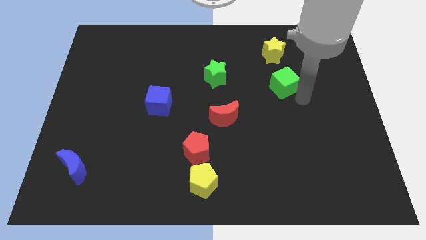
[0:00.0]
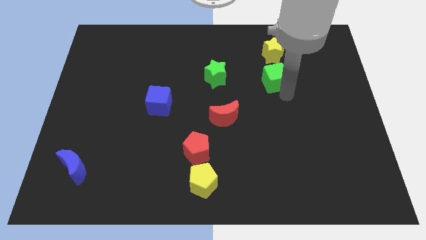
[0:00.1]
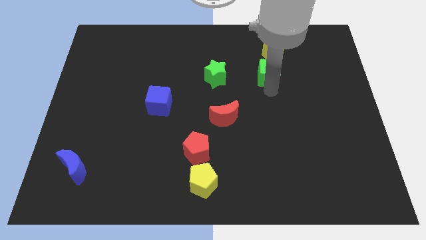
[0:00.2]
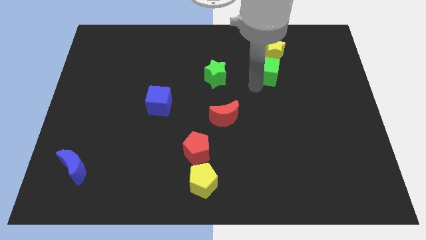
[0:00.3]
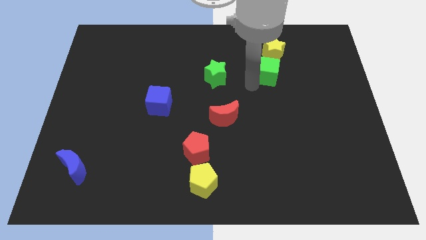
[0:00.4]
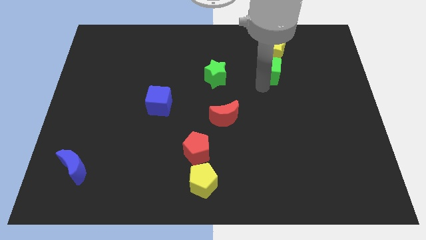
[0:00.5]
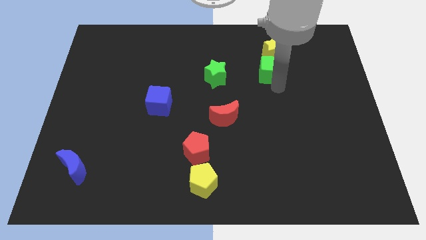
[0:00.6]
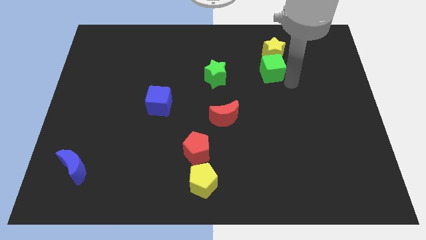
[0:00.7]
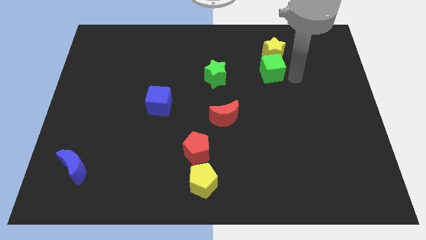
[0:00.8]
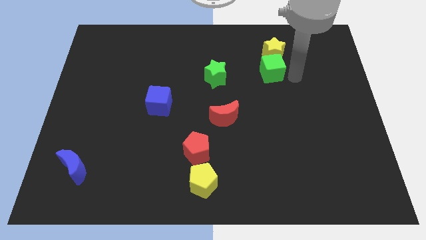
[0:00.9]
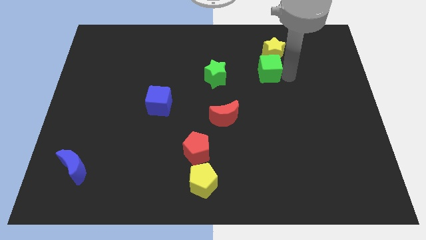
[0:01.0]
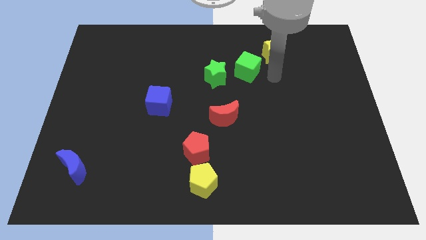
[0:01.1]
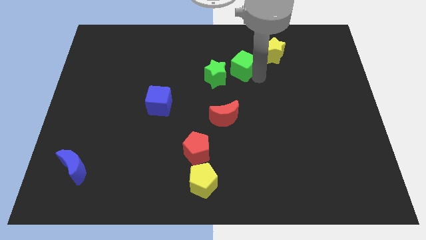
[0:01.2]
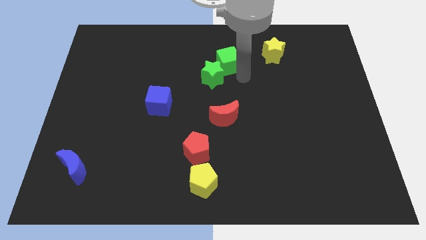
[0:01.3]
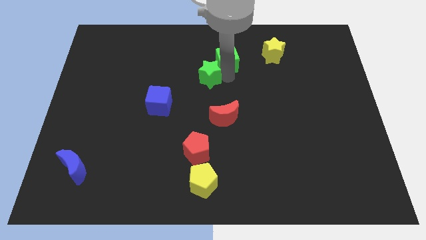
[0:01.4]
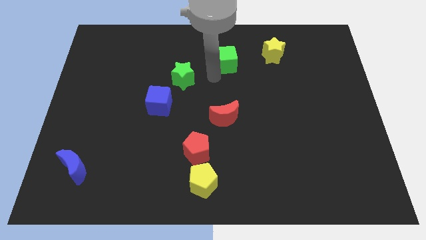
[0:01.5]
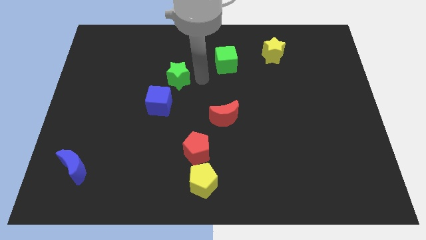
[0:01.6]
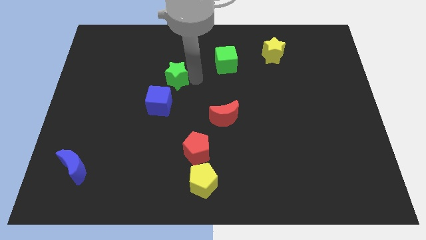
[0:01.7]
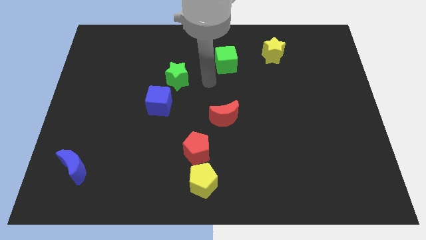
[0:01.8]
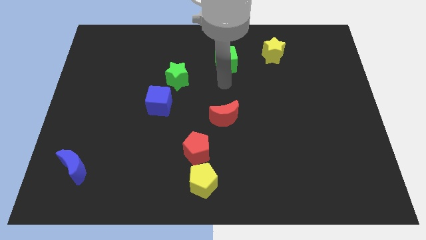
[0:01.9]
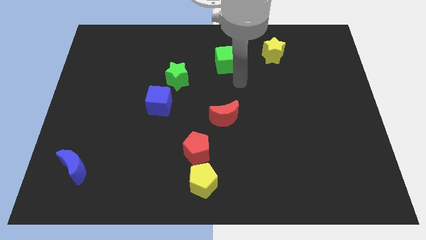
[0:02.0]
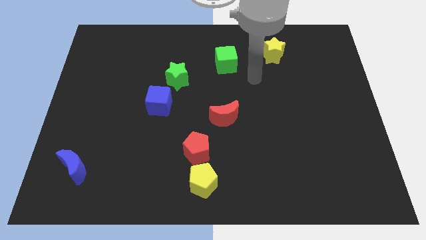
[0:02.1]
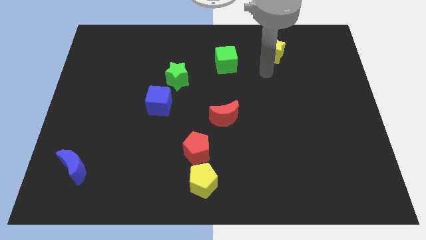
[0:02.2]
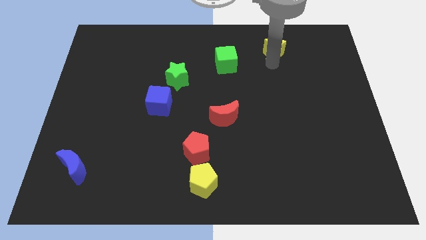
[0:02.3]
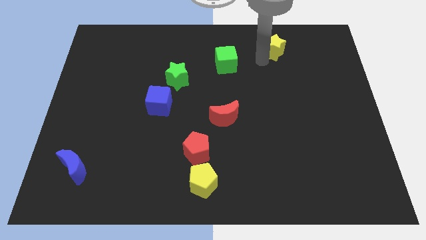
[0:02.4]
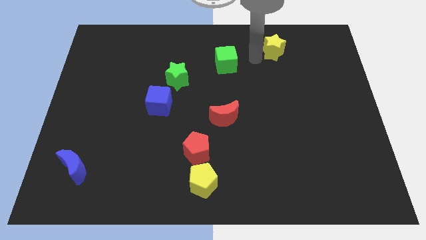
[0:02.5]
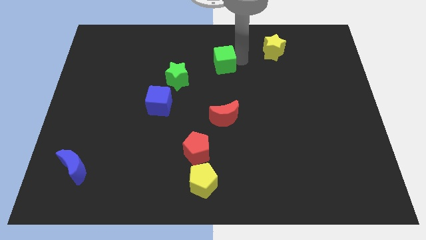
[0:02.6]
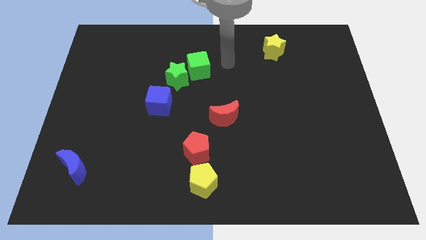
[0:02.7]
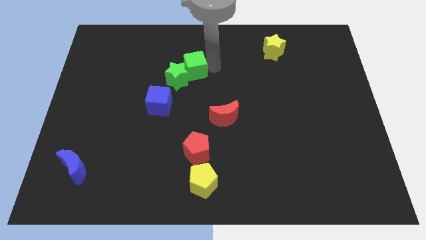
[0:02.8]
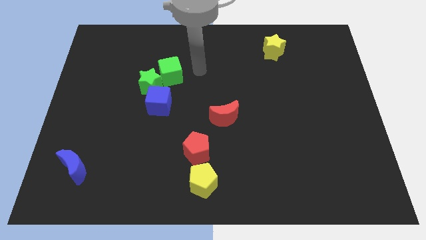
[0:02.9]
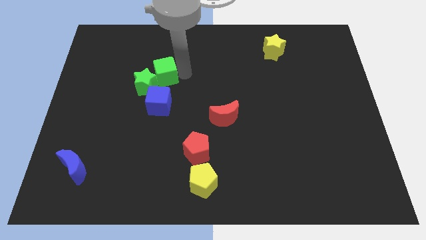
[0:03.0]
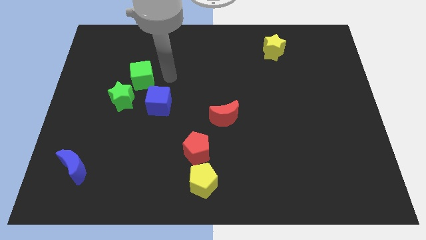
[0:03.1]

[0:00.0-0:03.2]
move green cube into green star

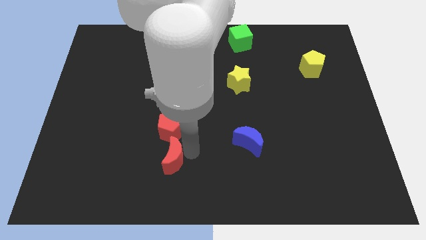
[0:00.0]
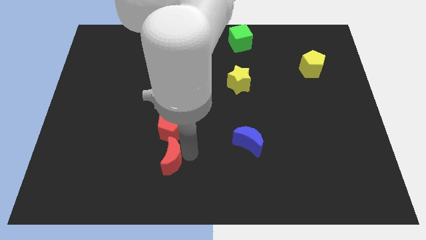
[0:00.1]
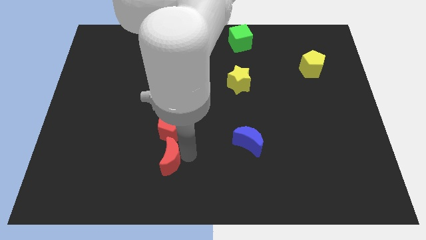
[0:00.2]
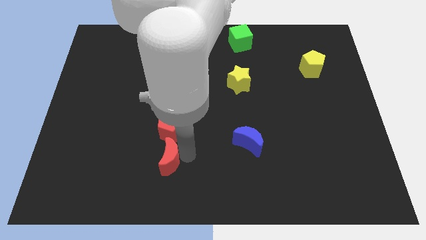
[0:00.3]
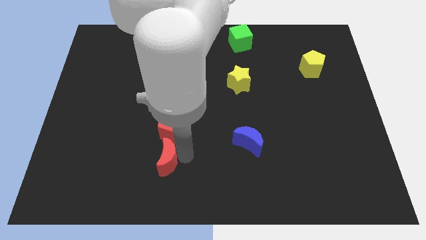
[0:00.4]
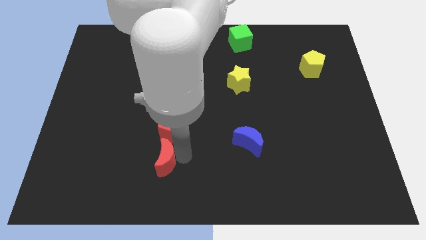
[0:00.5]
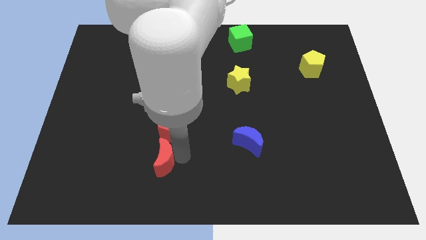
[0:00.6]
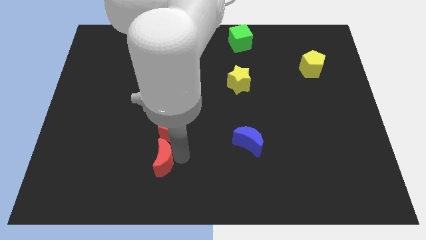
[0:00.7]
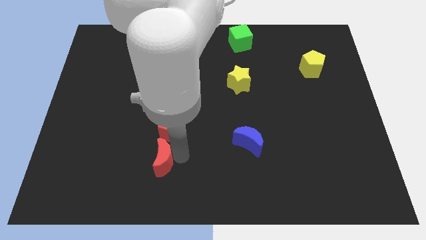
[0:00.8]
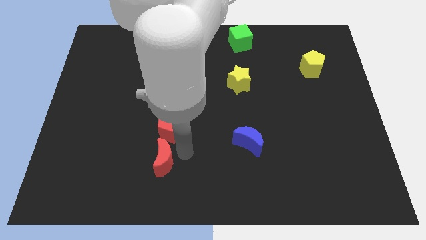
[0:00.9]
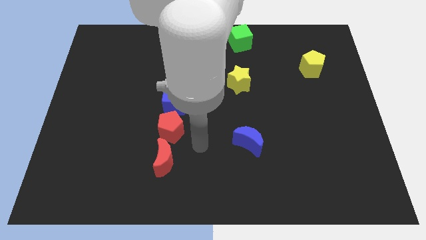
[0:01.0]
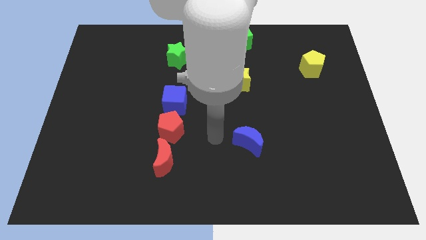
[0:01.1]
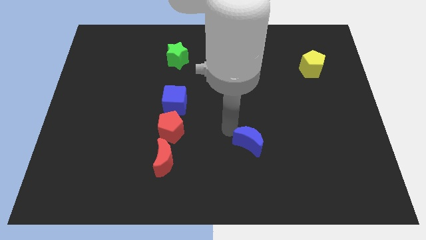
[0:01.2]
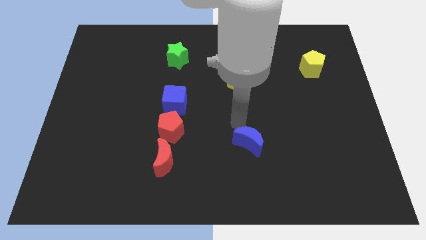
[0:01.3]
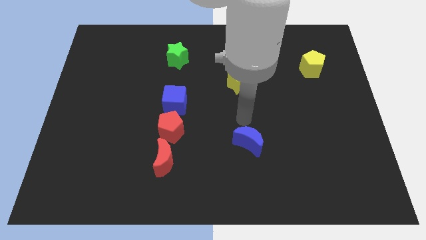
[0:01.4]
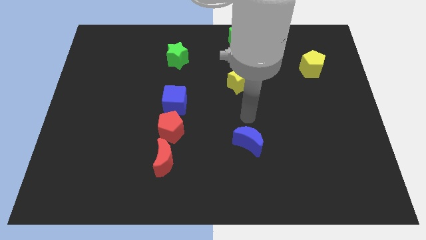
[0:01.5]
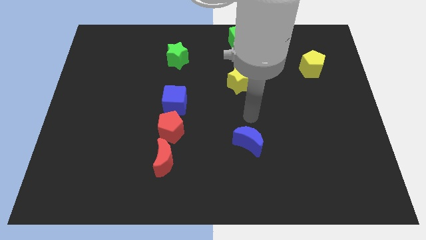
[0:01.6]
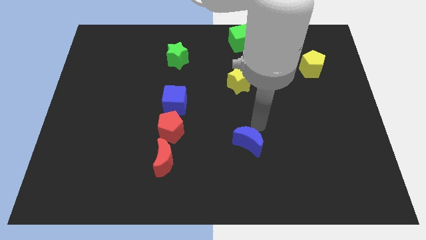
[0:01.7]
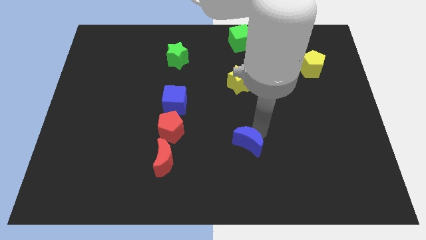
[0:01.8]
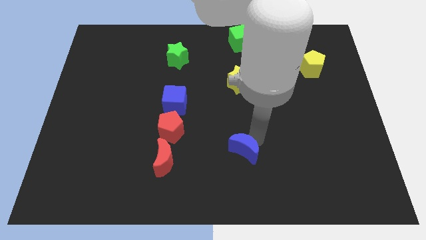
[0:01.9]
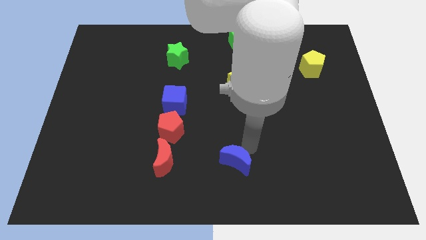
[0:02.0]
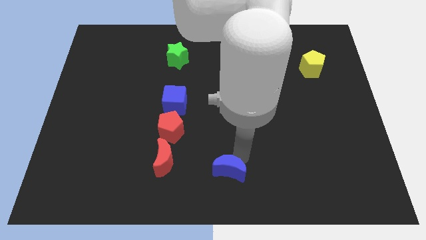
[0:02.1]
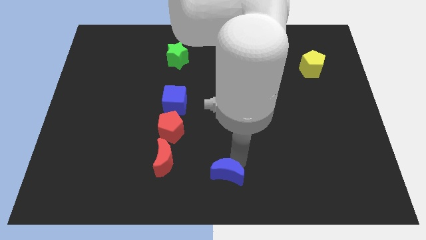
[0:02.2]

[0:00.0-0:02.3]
move the blue moon towards the bottom center of the board

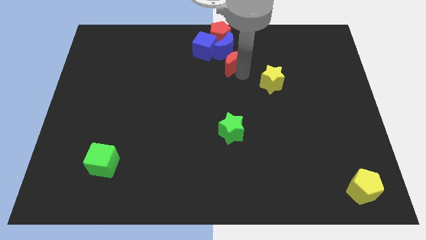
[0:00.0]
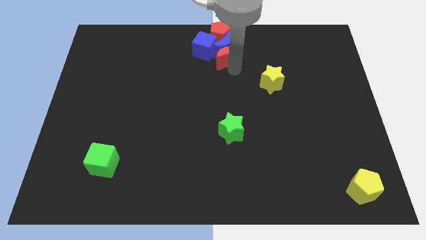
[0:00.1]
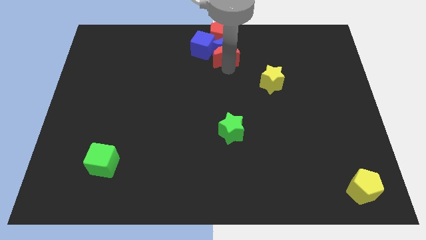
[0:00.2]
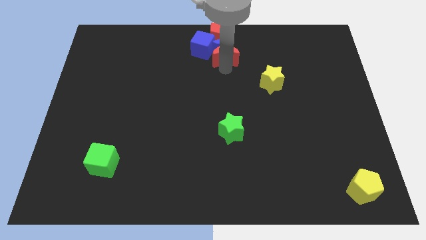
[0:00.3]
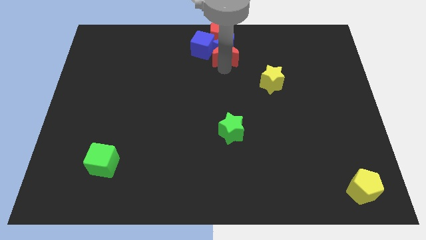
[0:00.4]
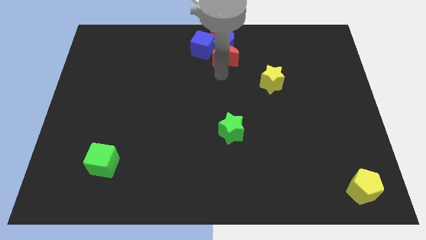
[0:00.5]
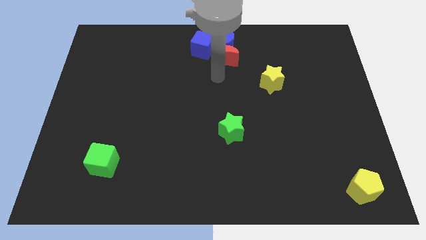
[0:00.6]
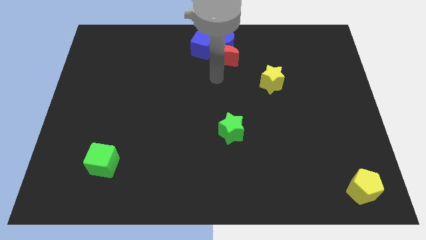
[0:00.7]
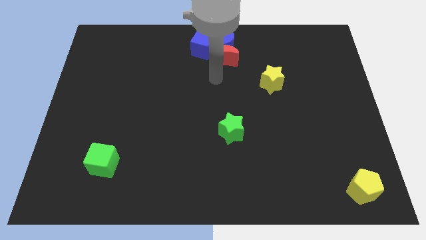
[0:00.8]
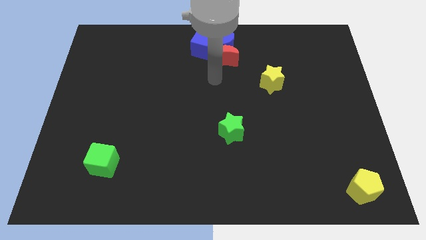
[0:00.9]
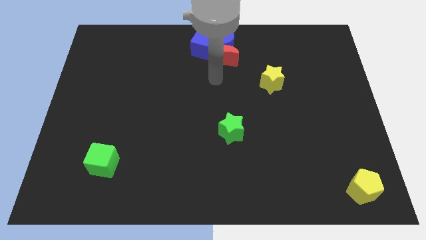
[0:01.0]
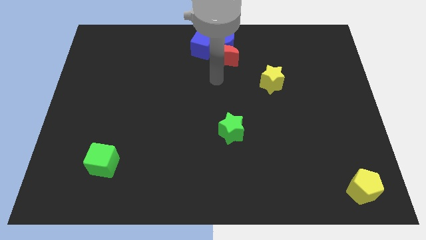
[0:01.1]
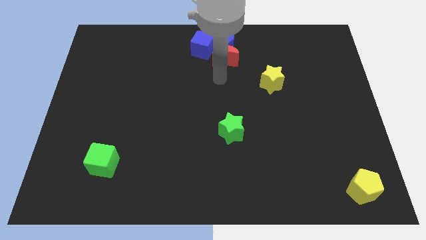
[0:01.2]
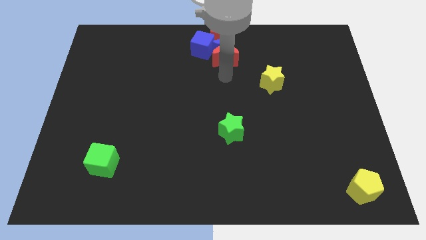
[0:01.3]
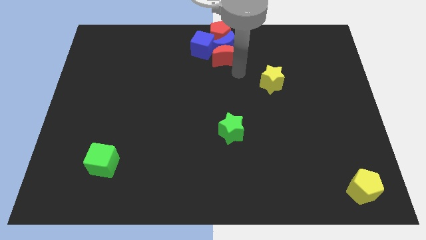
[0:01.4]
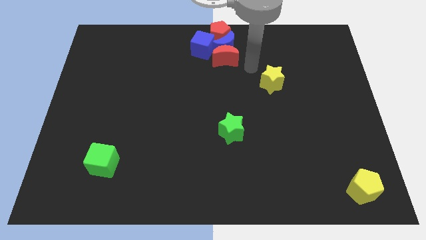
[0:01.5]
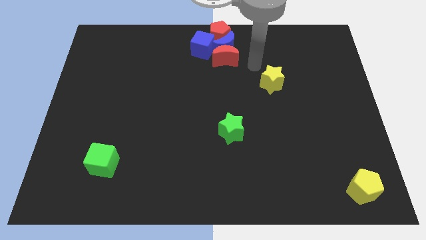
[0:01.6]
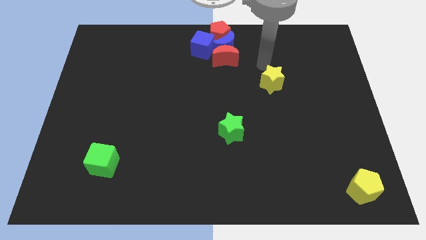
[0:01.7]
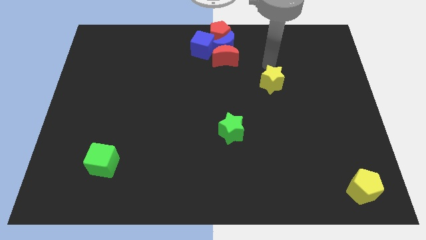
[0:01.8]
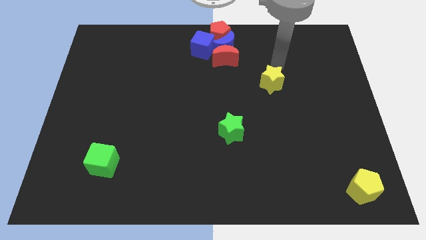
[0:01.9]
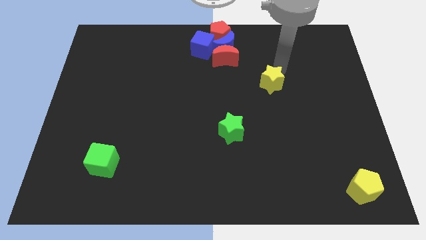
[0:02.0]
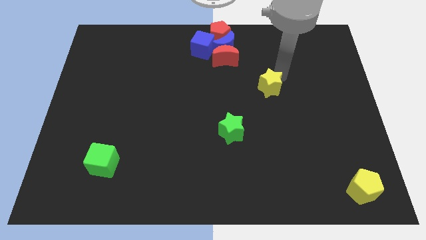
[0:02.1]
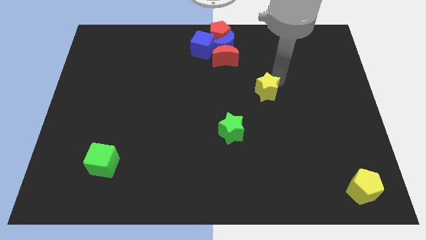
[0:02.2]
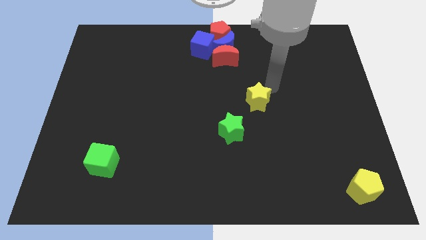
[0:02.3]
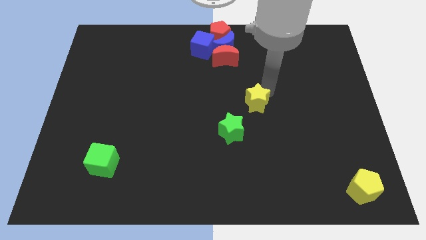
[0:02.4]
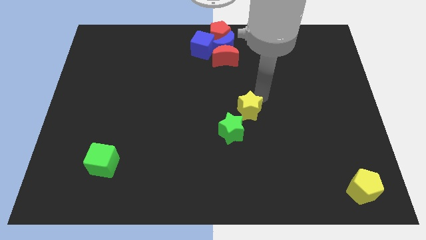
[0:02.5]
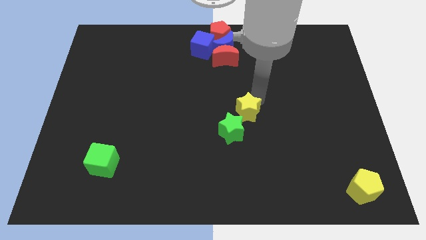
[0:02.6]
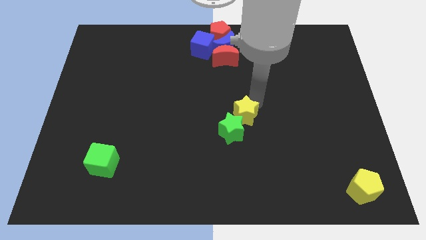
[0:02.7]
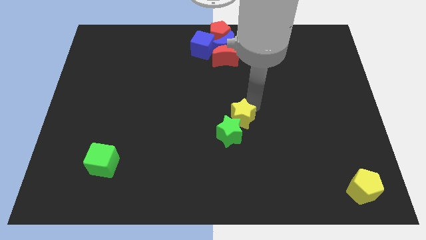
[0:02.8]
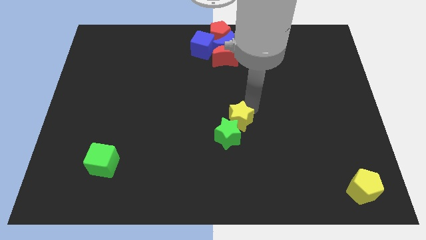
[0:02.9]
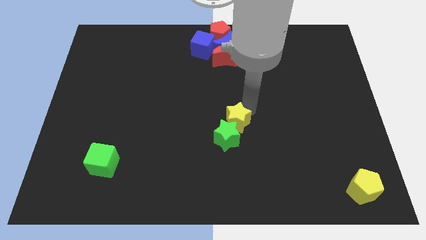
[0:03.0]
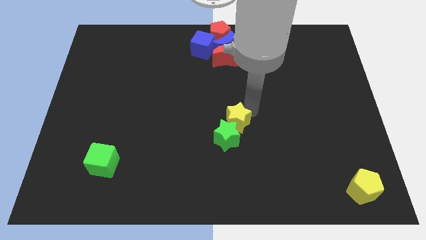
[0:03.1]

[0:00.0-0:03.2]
push yellow star towards green star

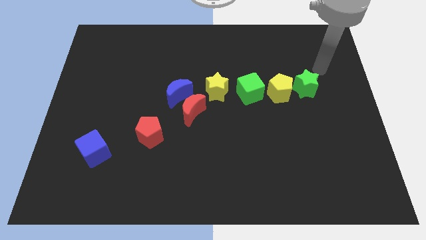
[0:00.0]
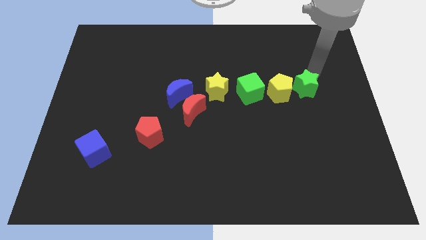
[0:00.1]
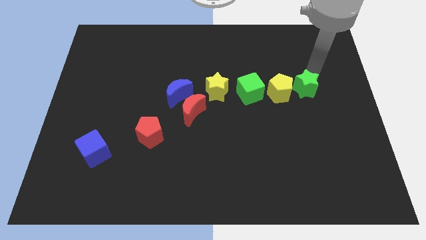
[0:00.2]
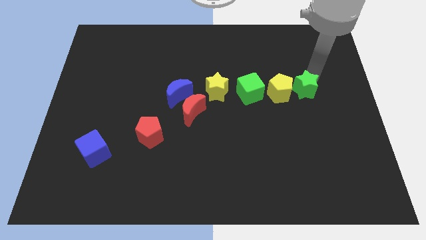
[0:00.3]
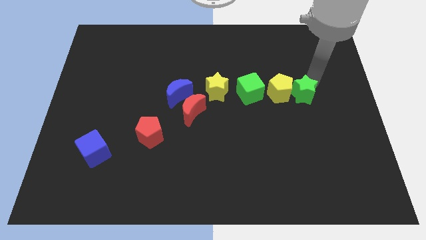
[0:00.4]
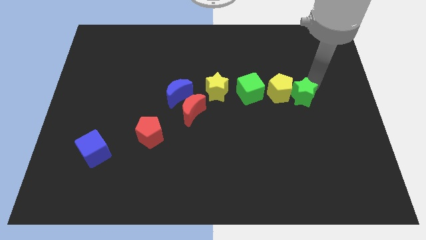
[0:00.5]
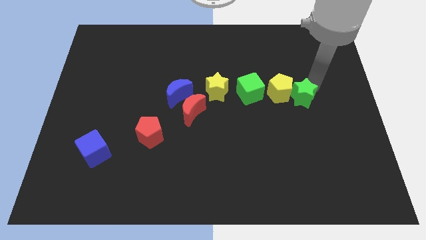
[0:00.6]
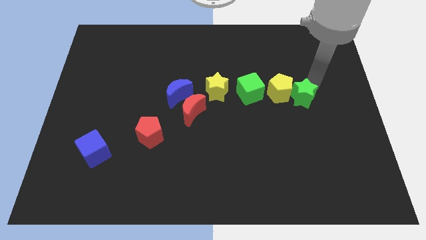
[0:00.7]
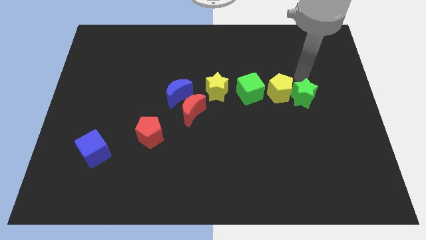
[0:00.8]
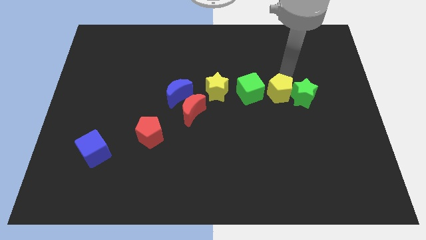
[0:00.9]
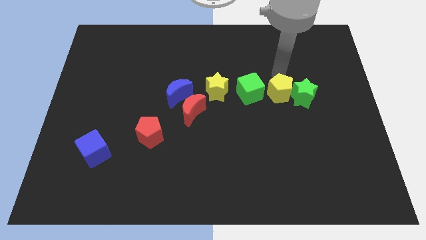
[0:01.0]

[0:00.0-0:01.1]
slightly push the green star right to yellow pentagon
